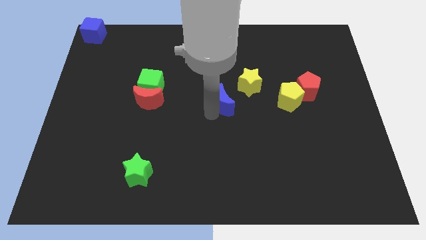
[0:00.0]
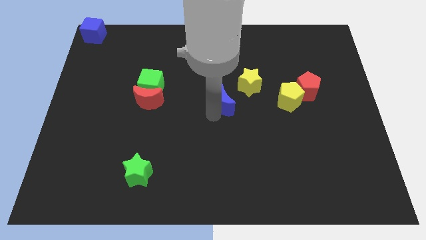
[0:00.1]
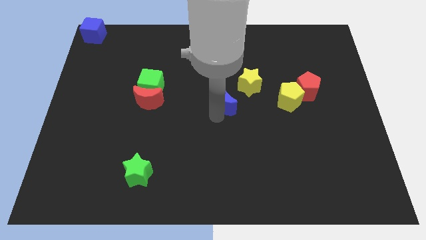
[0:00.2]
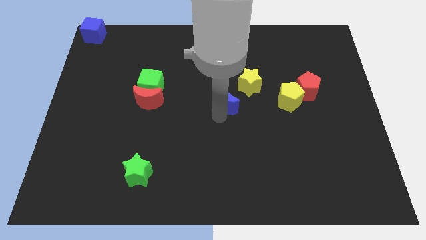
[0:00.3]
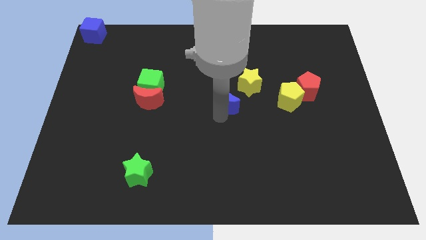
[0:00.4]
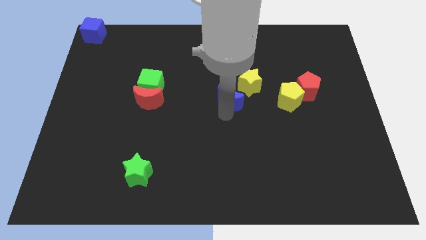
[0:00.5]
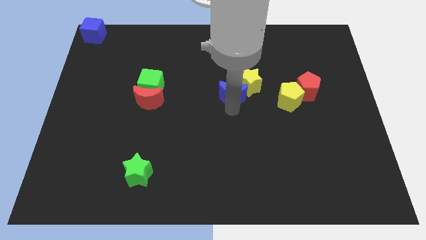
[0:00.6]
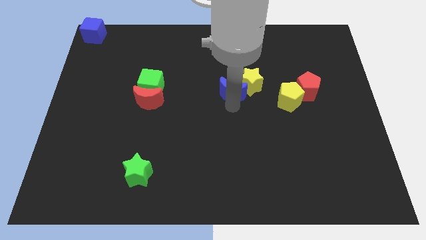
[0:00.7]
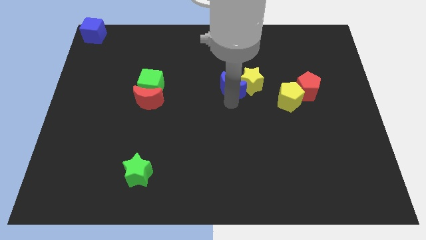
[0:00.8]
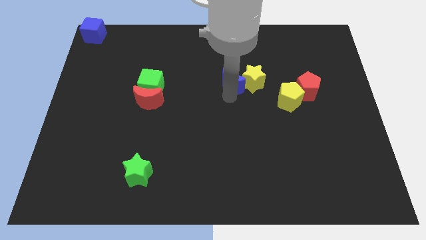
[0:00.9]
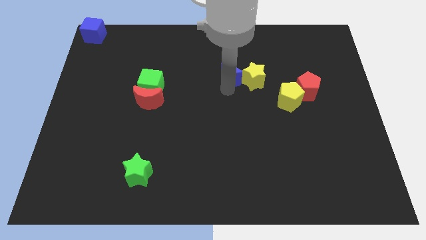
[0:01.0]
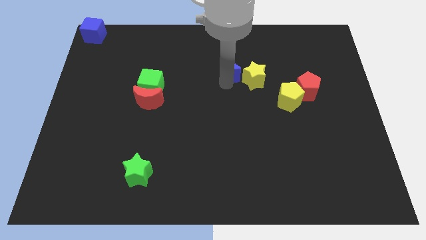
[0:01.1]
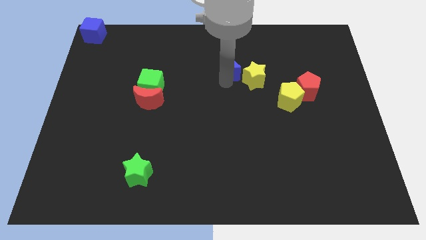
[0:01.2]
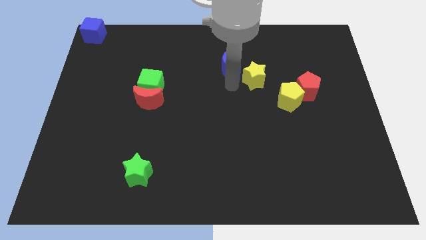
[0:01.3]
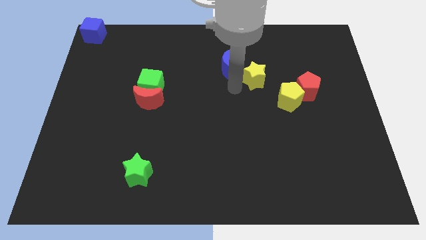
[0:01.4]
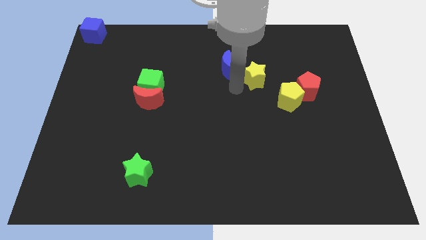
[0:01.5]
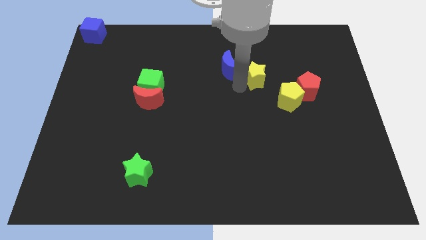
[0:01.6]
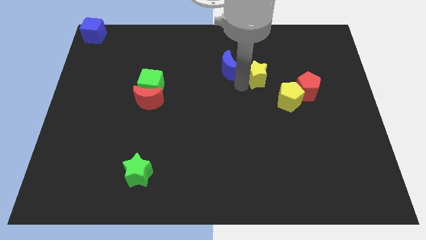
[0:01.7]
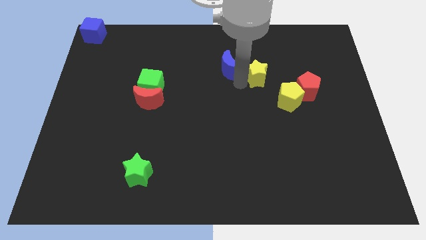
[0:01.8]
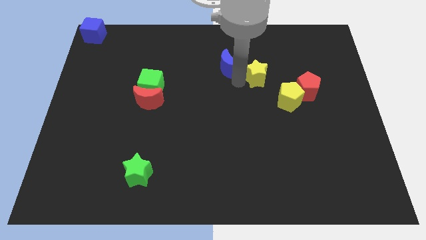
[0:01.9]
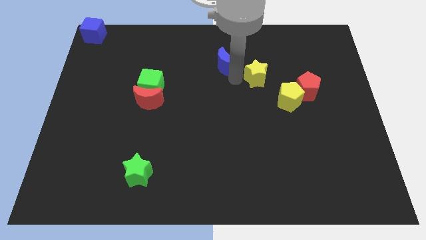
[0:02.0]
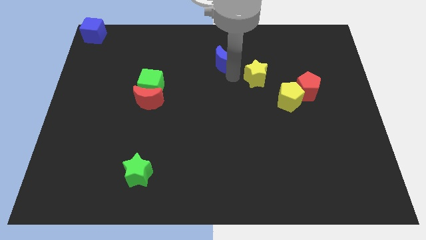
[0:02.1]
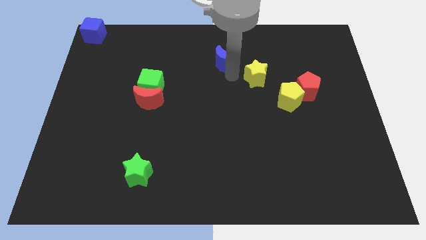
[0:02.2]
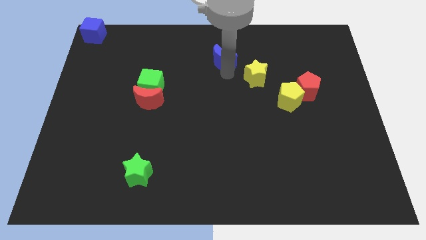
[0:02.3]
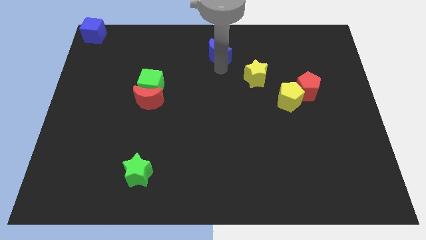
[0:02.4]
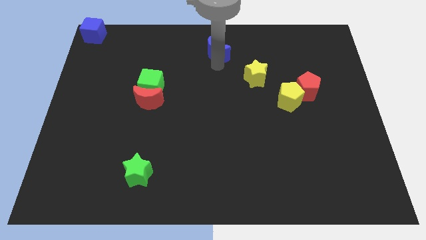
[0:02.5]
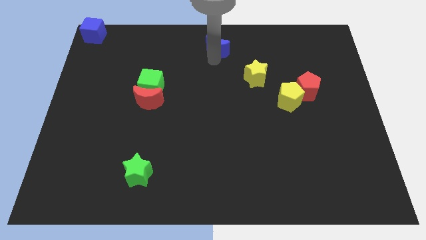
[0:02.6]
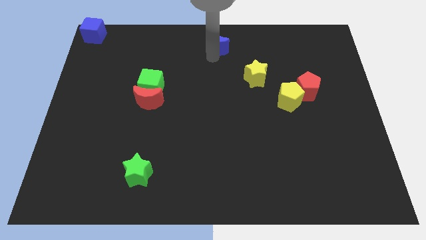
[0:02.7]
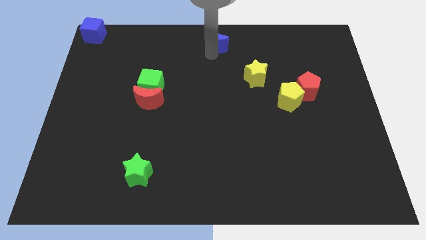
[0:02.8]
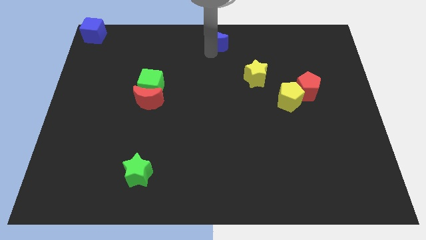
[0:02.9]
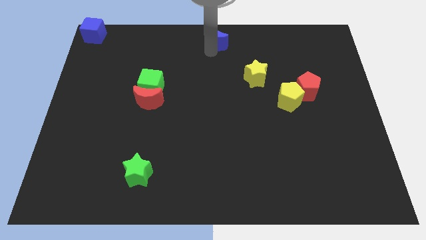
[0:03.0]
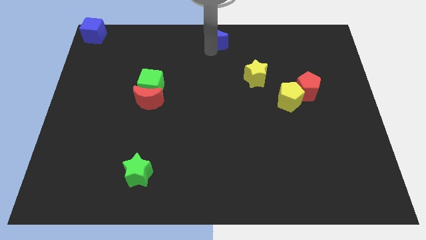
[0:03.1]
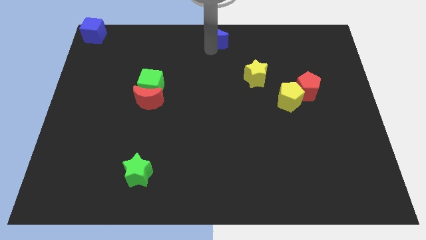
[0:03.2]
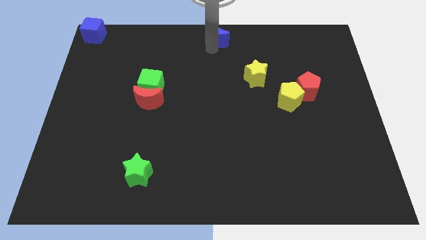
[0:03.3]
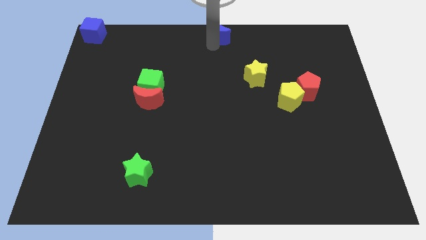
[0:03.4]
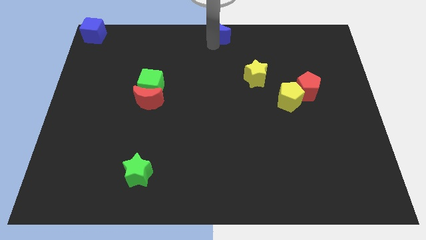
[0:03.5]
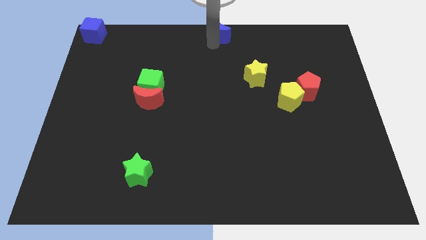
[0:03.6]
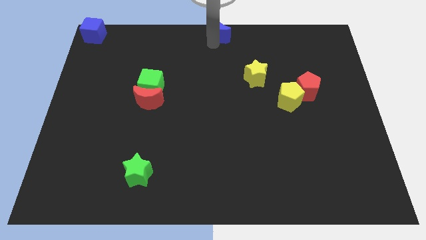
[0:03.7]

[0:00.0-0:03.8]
move the blue crescent to the top center of the board

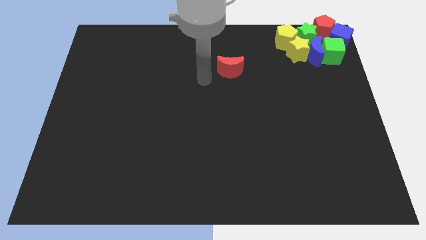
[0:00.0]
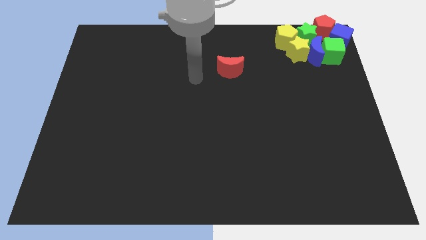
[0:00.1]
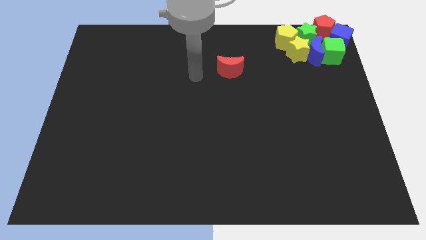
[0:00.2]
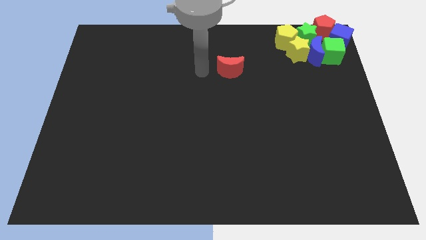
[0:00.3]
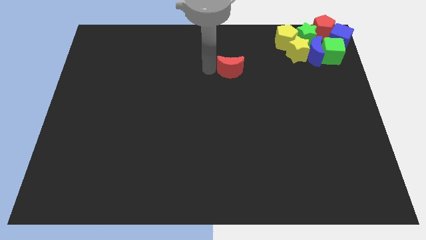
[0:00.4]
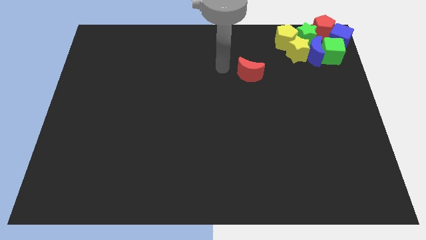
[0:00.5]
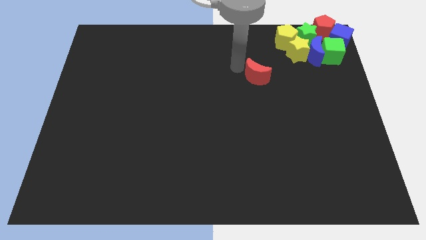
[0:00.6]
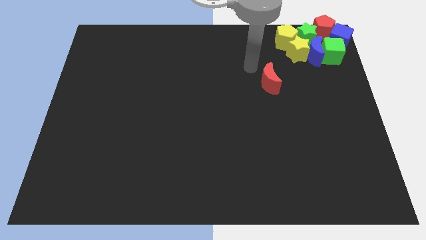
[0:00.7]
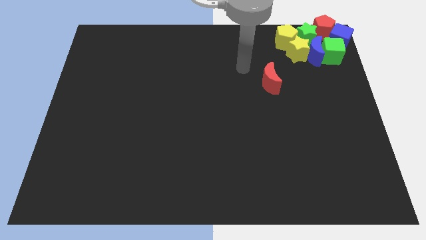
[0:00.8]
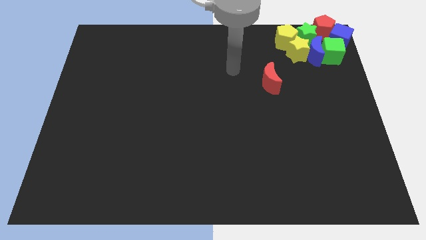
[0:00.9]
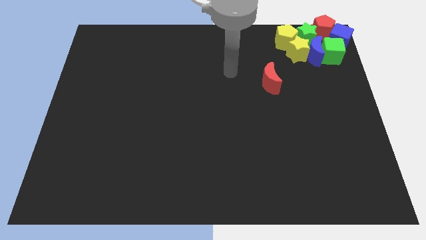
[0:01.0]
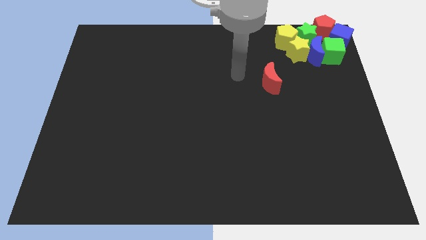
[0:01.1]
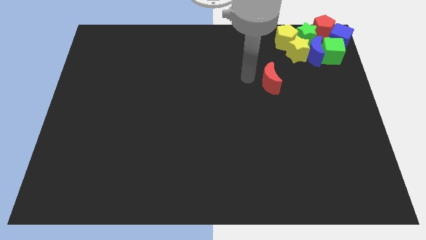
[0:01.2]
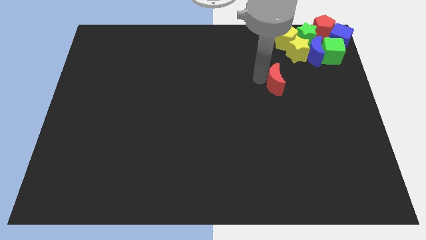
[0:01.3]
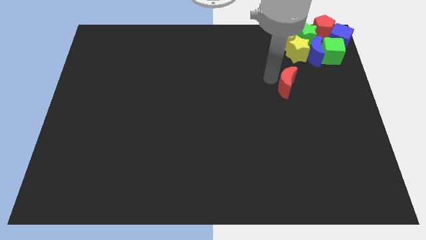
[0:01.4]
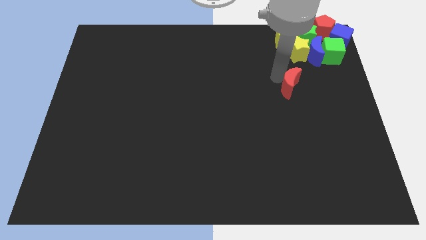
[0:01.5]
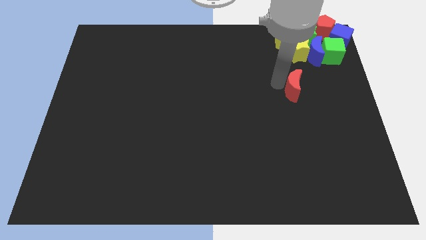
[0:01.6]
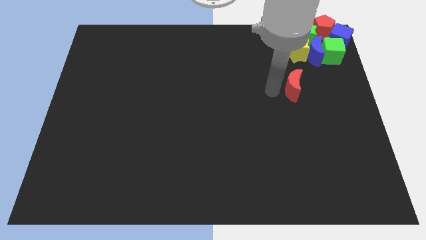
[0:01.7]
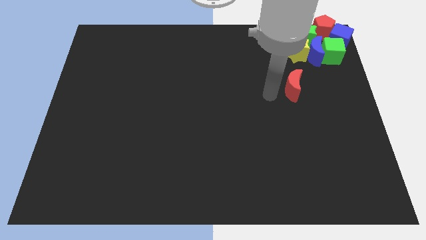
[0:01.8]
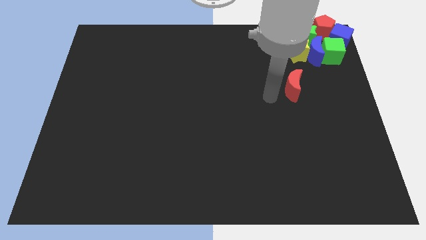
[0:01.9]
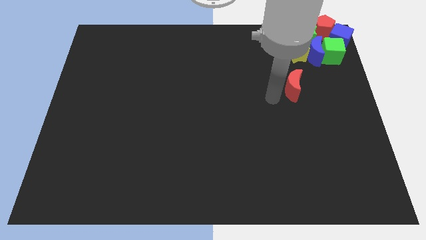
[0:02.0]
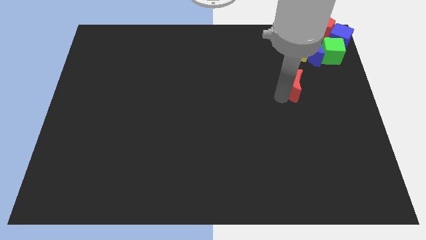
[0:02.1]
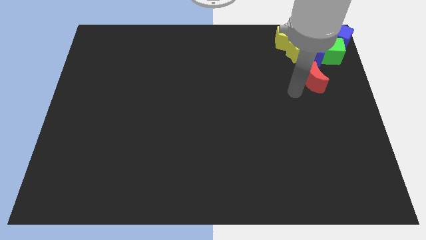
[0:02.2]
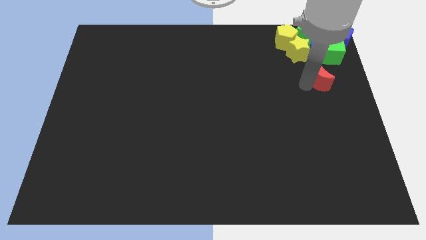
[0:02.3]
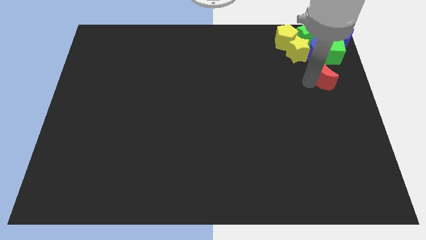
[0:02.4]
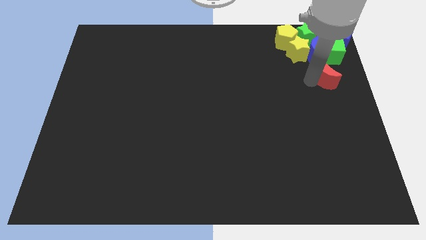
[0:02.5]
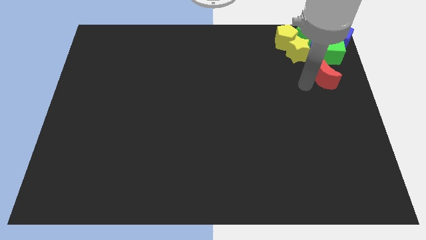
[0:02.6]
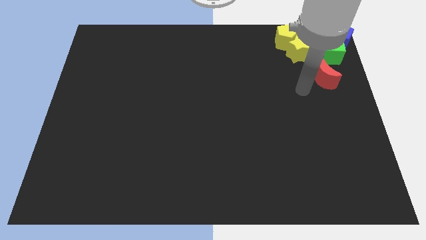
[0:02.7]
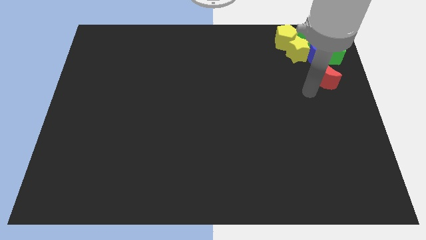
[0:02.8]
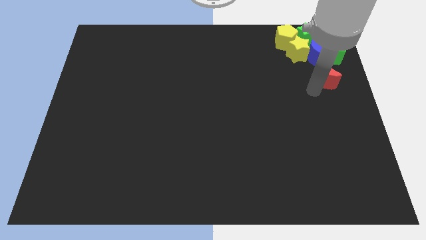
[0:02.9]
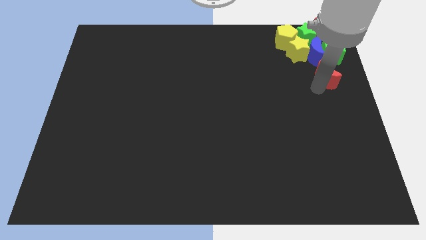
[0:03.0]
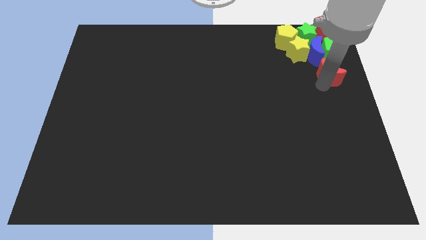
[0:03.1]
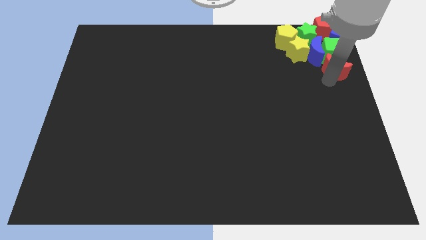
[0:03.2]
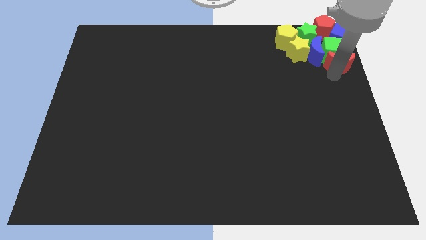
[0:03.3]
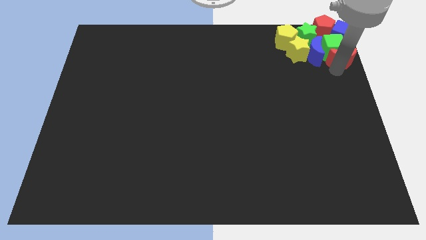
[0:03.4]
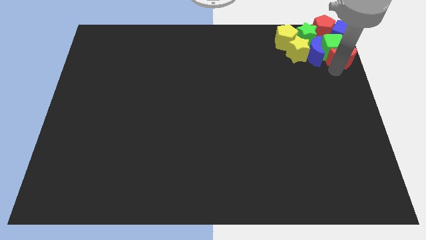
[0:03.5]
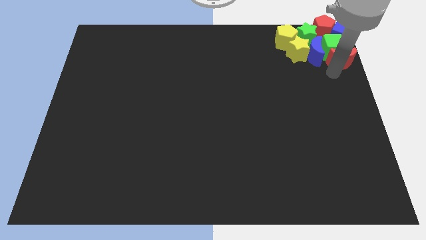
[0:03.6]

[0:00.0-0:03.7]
move the red crescent into the green cube

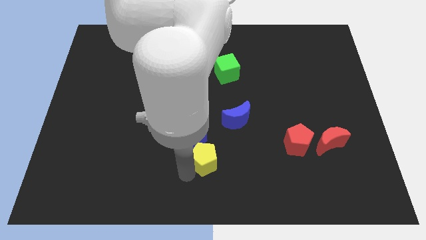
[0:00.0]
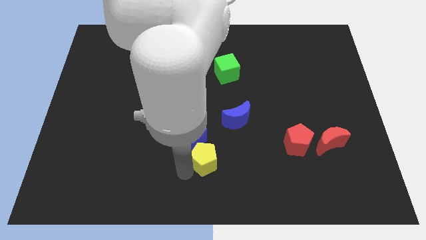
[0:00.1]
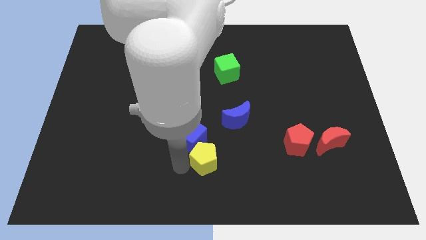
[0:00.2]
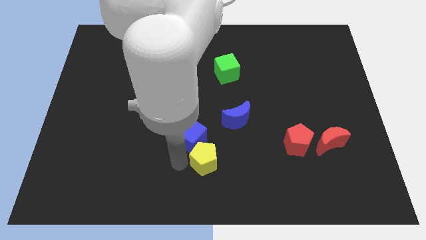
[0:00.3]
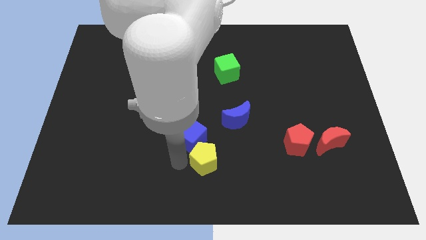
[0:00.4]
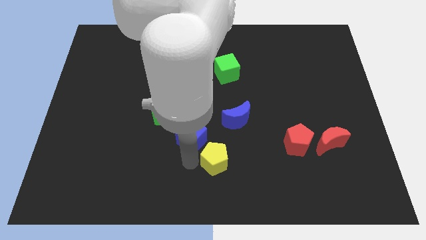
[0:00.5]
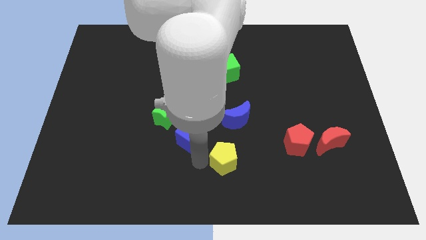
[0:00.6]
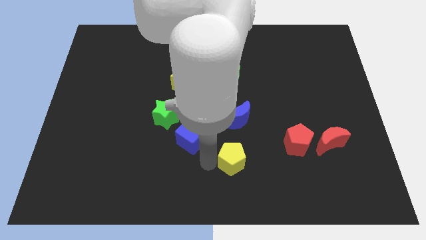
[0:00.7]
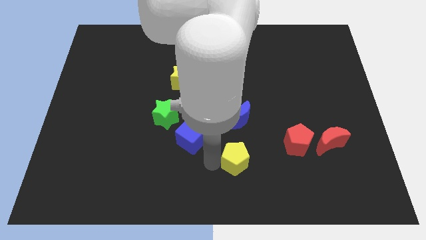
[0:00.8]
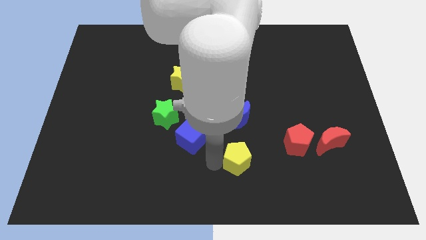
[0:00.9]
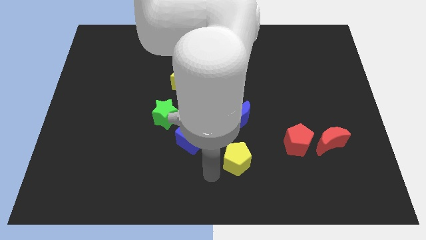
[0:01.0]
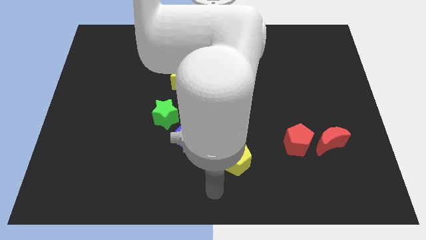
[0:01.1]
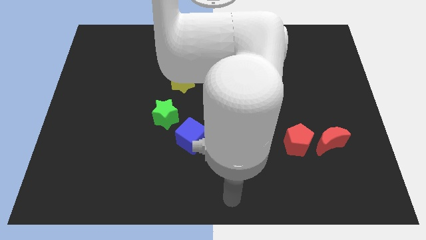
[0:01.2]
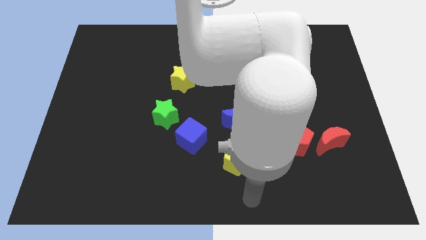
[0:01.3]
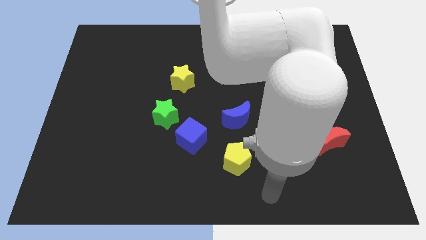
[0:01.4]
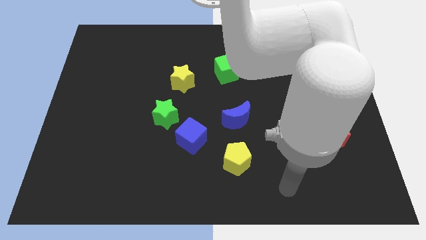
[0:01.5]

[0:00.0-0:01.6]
push the yellow pentagon vertically below the blue crescent
